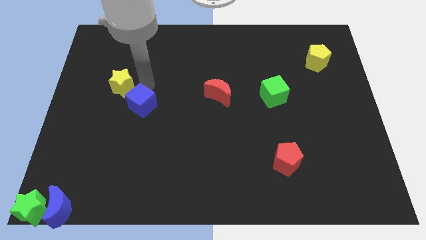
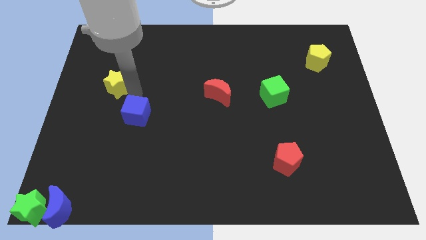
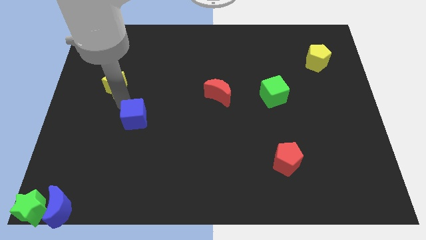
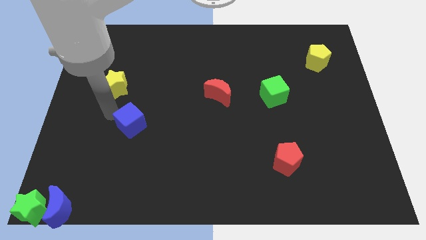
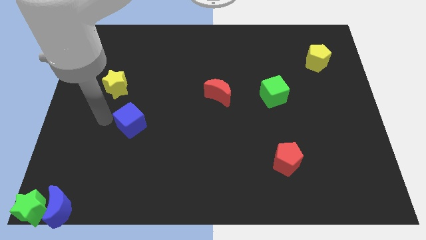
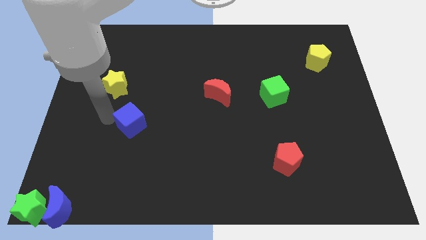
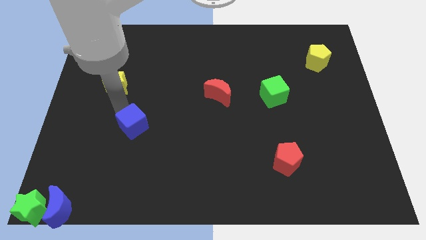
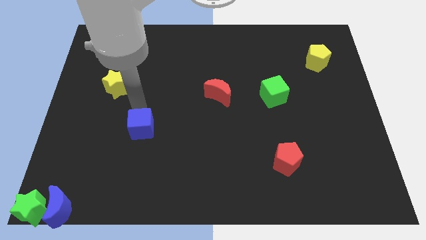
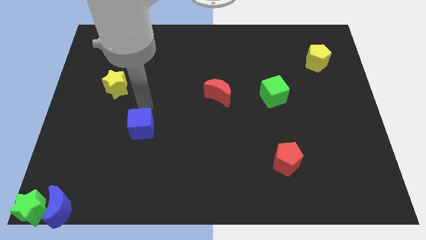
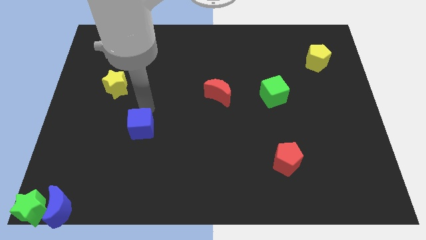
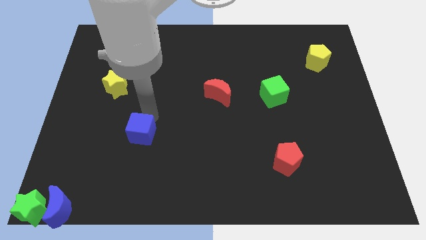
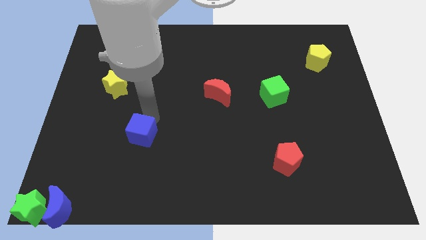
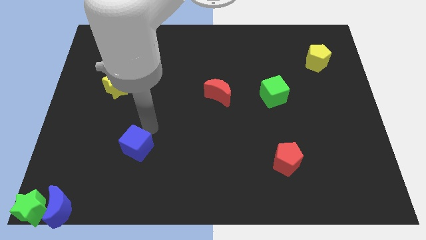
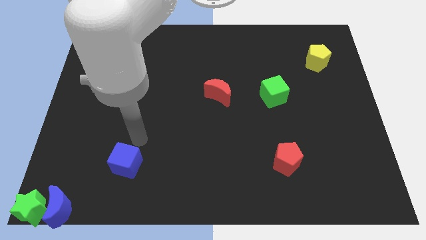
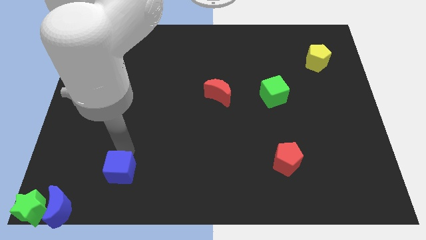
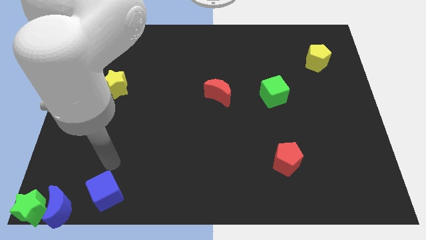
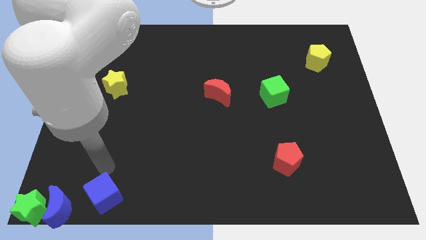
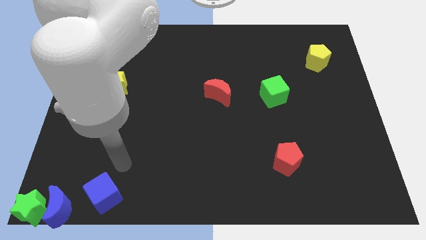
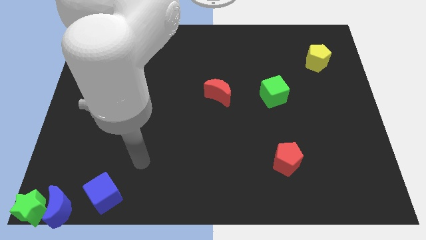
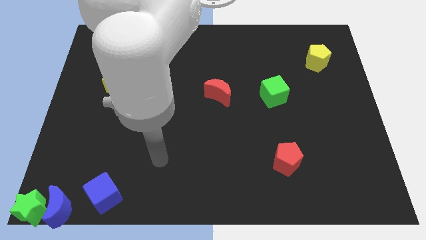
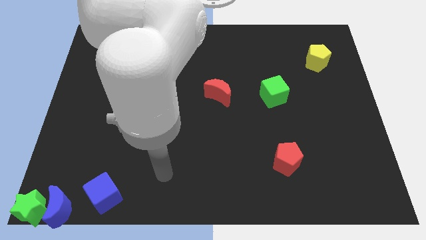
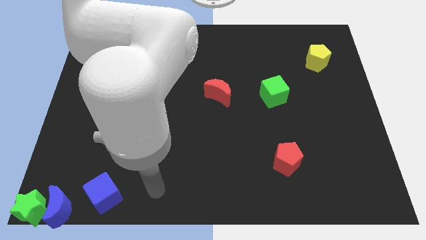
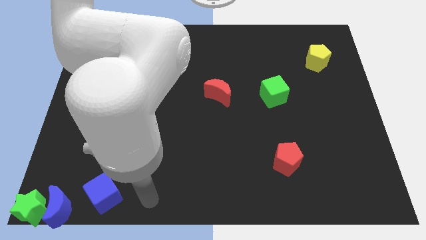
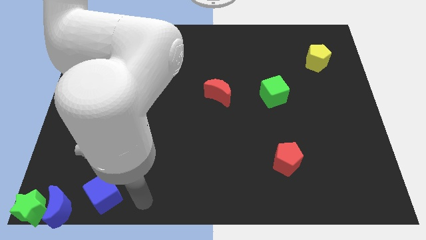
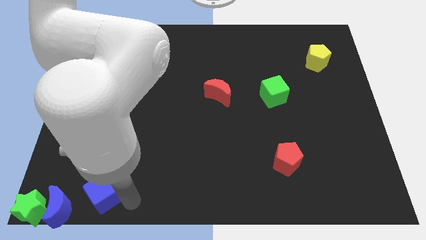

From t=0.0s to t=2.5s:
separate the yellow star and the blue cube

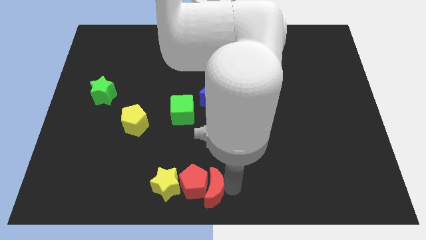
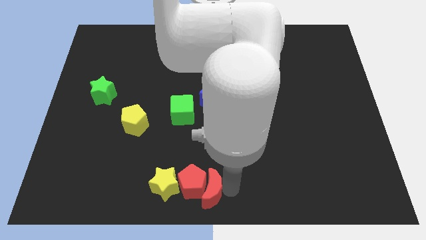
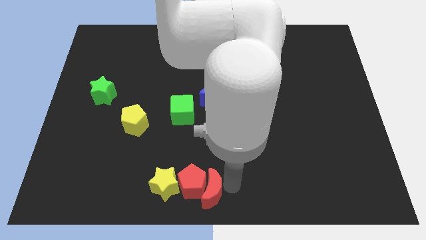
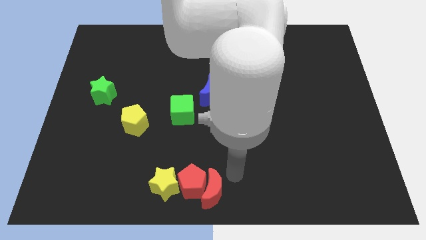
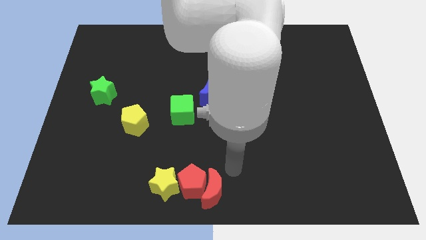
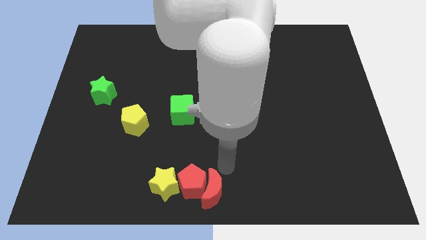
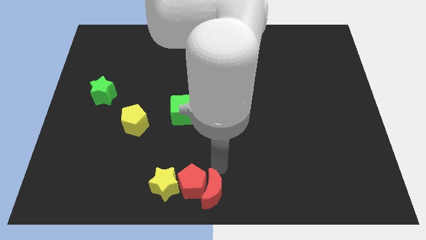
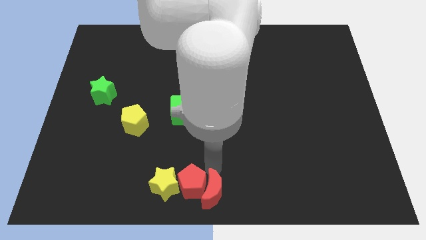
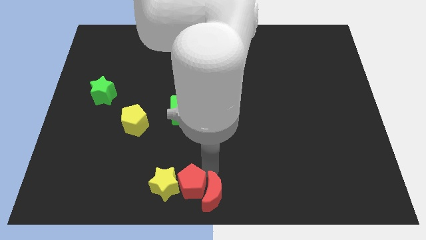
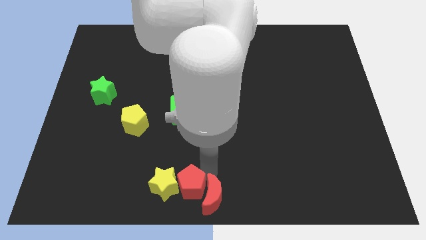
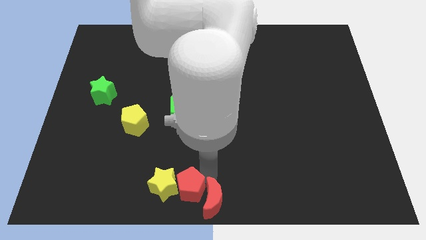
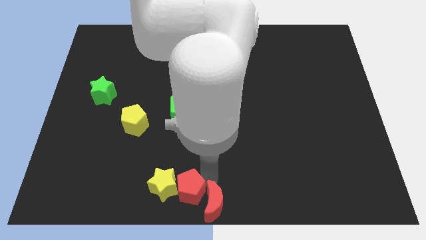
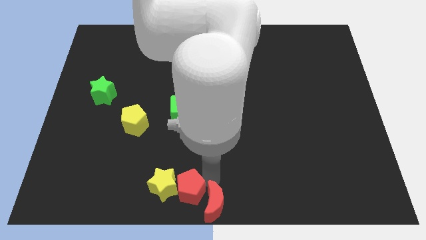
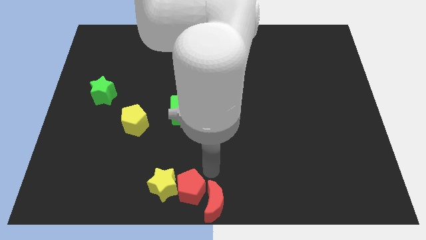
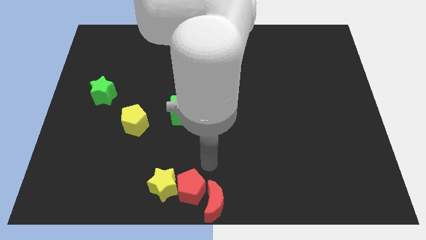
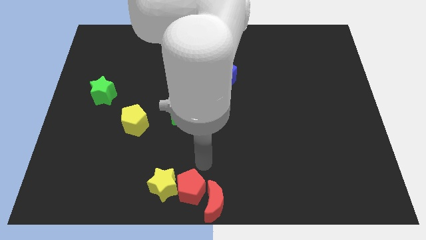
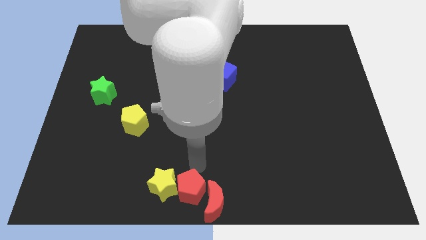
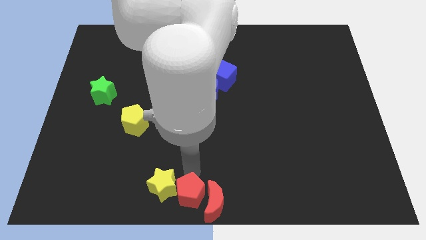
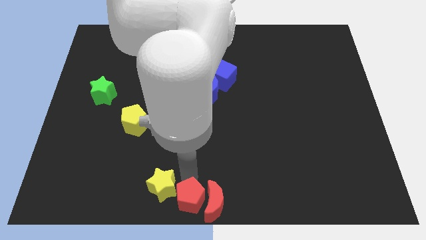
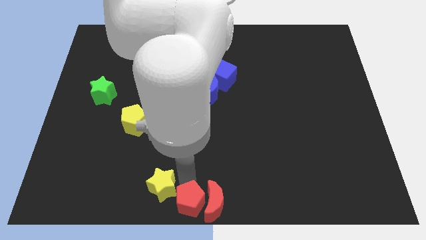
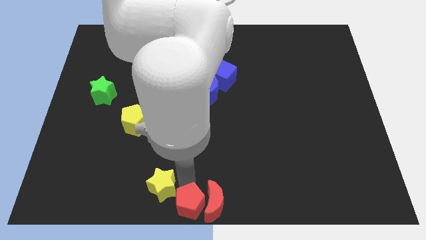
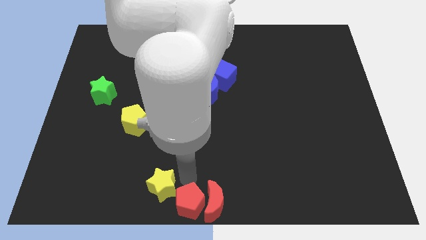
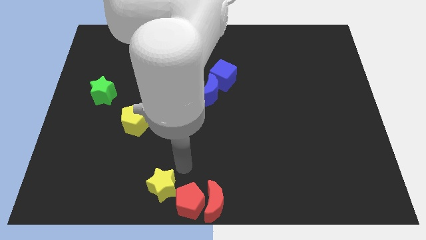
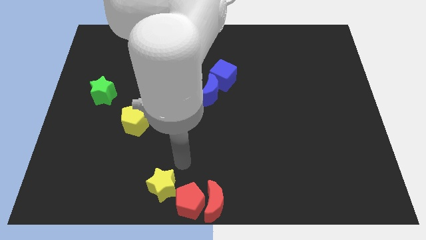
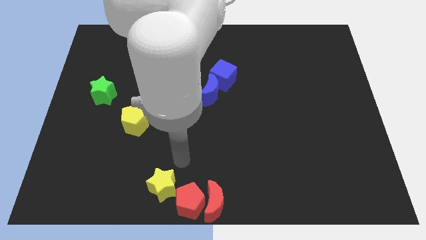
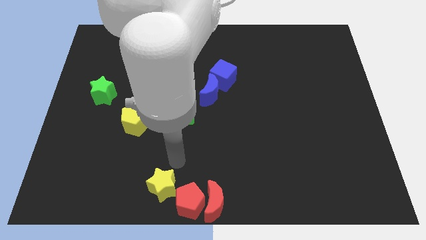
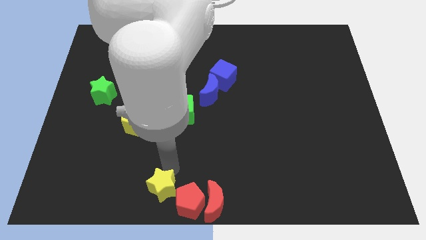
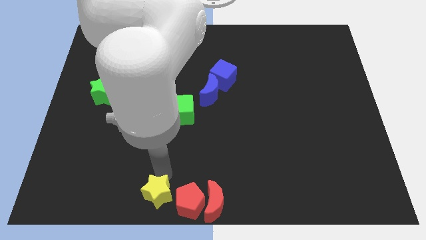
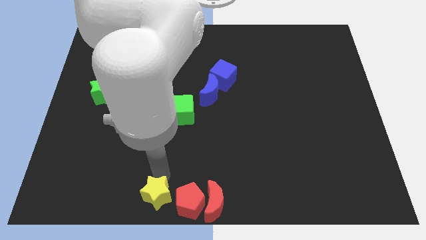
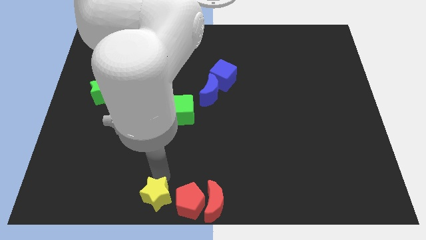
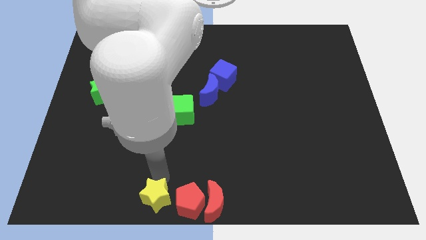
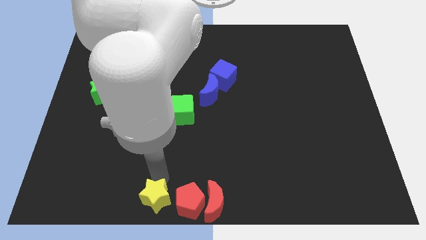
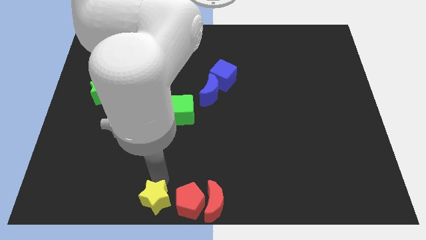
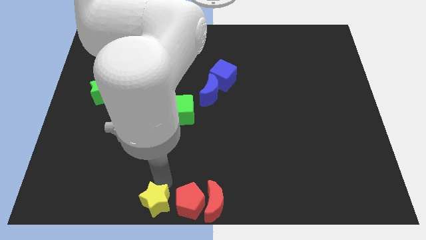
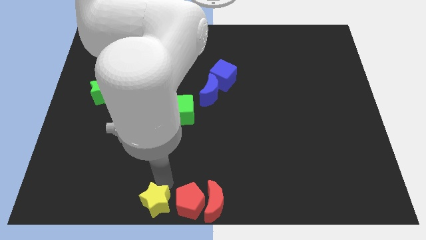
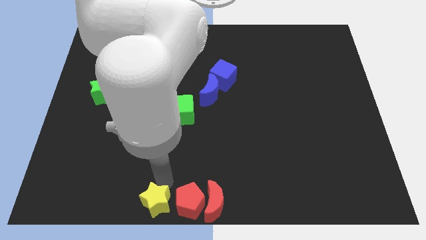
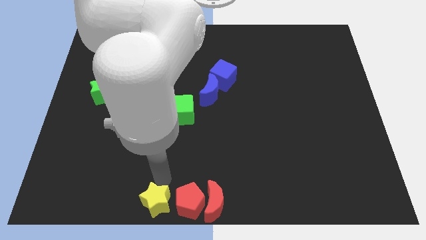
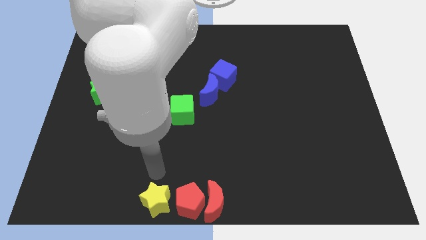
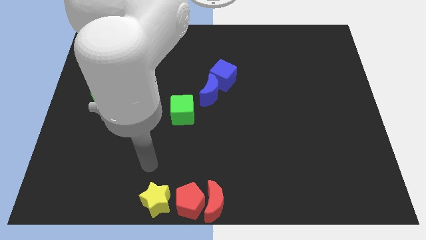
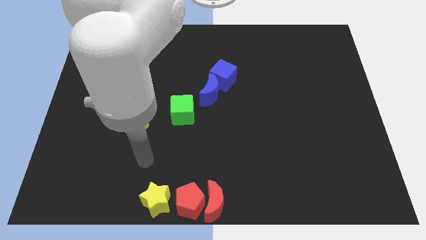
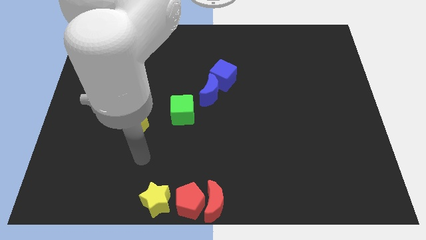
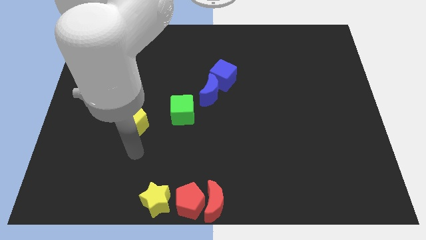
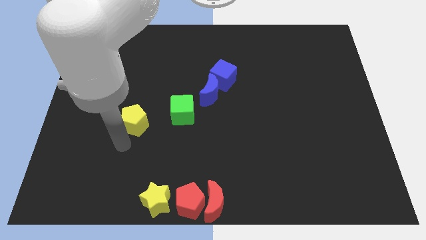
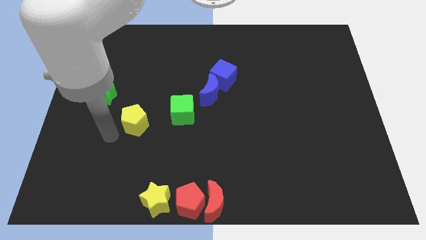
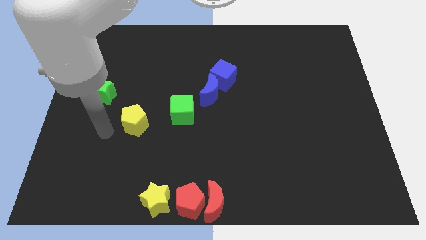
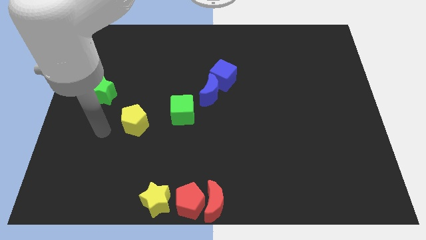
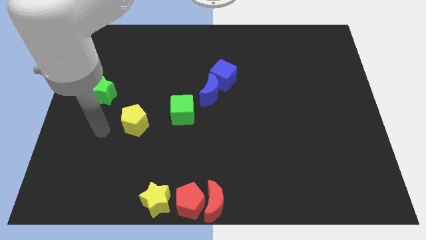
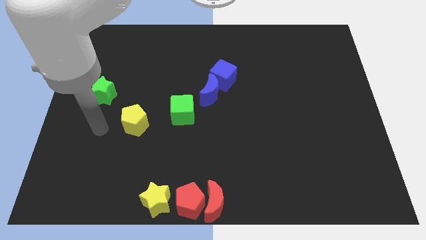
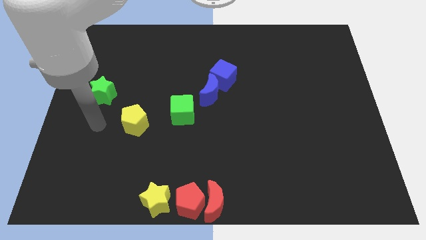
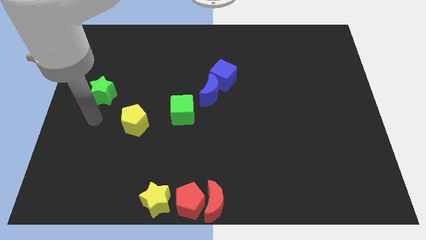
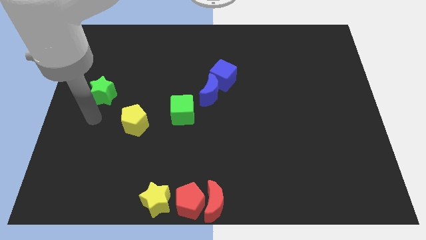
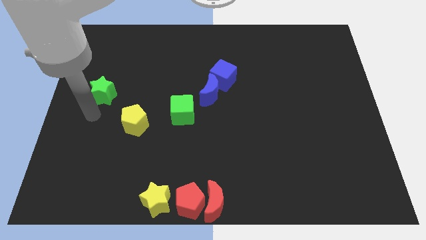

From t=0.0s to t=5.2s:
move the yellow star and red blocks to the bottom middle

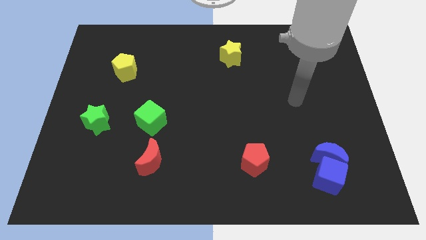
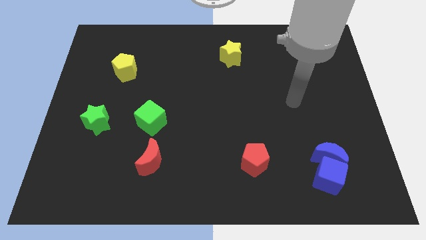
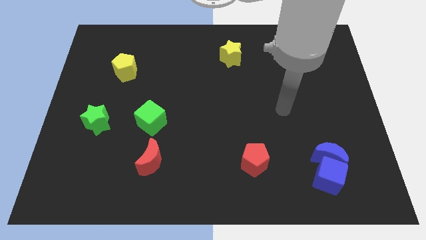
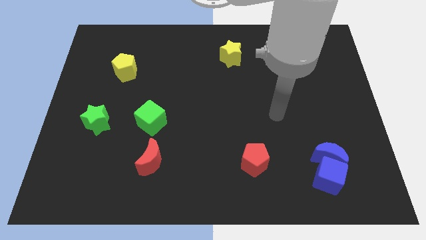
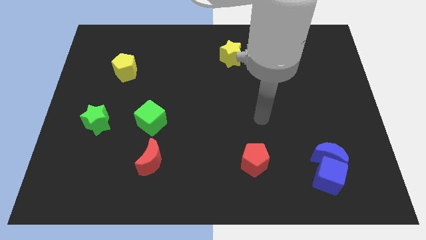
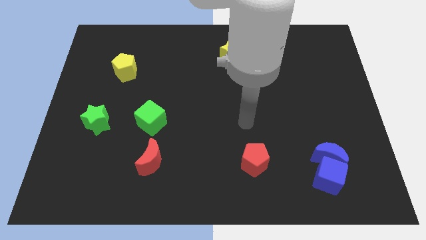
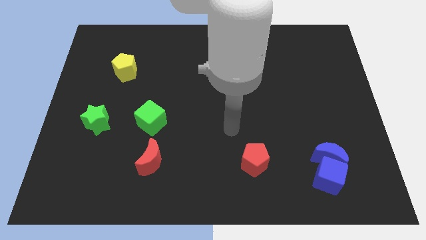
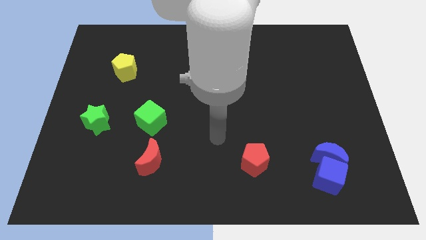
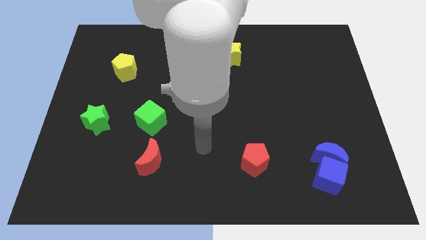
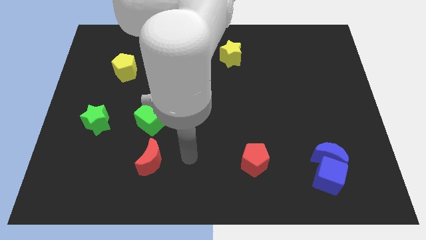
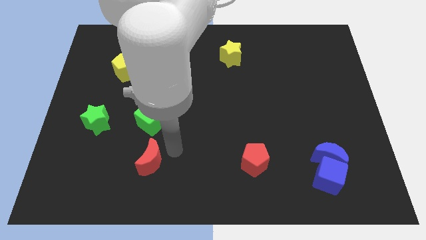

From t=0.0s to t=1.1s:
point your hand at the right side of the red moon

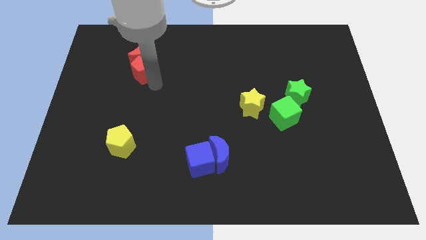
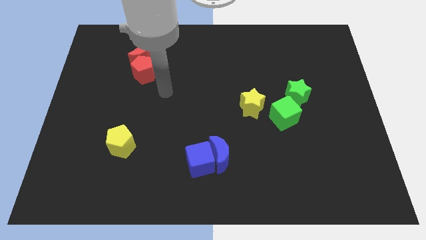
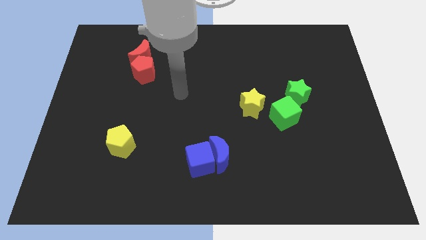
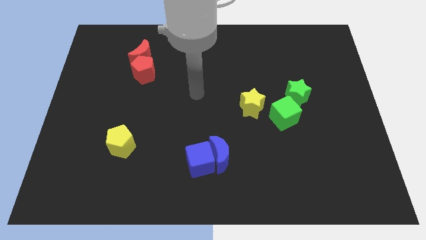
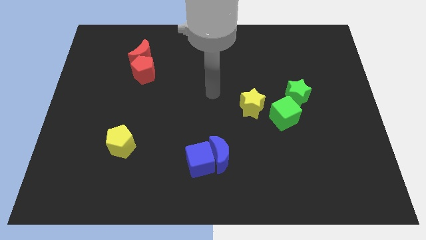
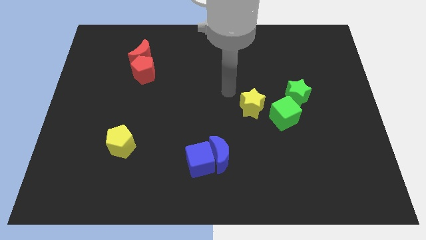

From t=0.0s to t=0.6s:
move the arm away from the red pentagon
